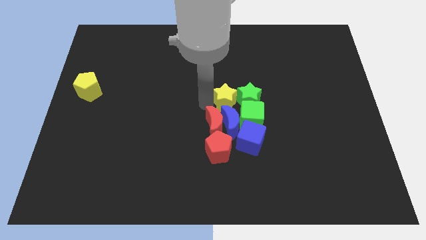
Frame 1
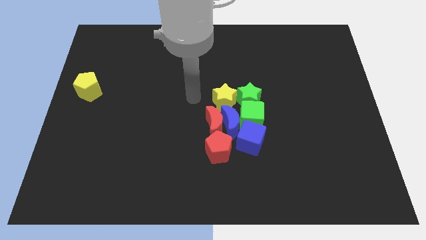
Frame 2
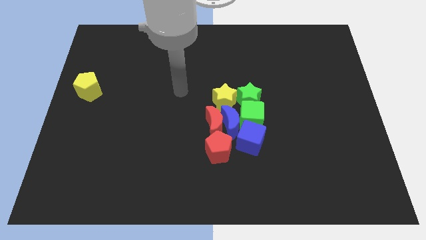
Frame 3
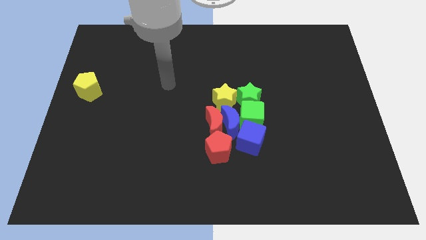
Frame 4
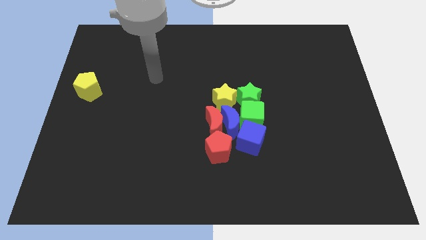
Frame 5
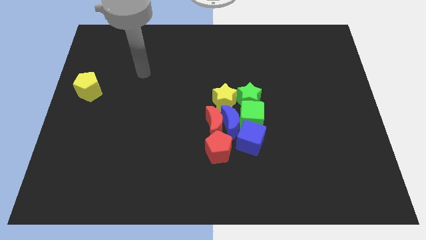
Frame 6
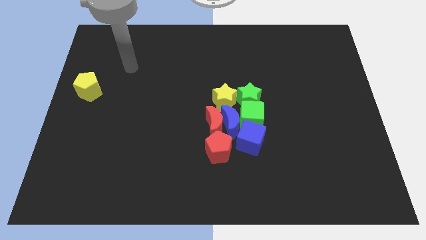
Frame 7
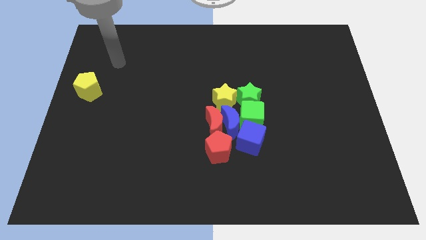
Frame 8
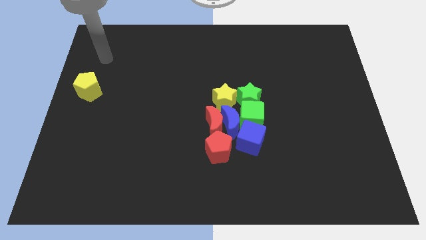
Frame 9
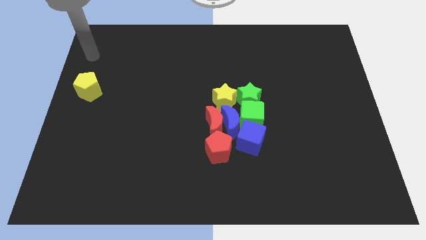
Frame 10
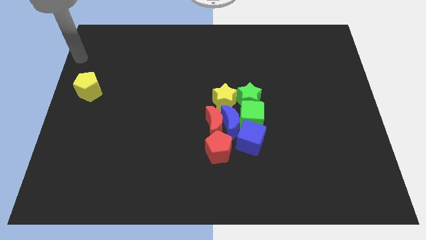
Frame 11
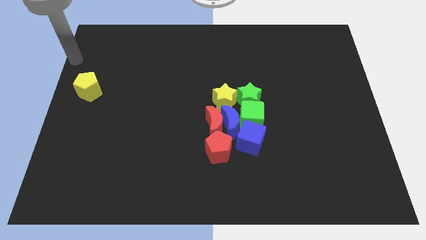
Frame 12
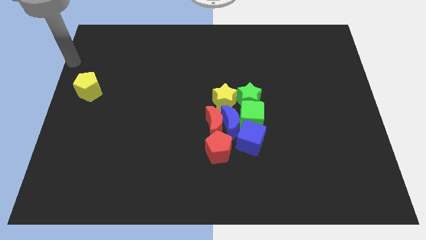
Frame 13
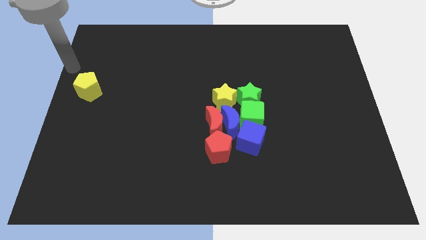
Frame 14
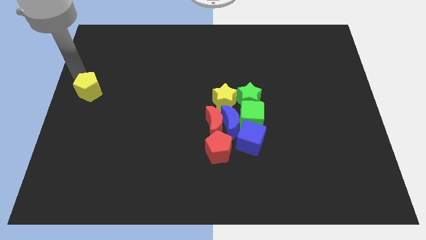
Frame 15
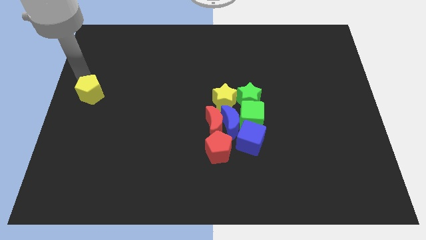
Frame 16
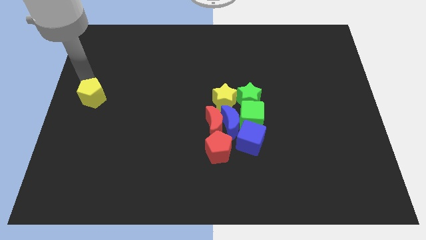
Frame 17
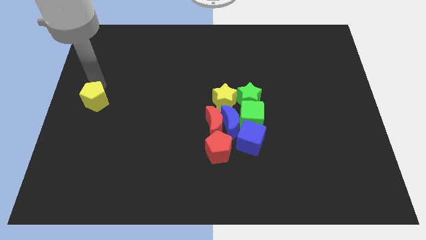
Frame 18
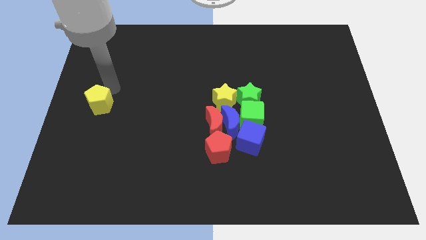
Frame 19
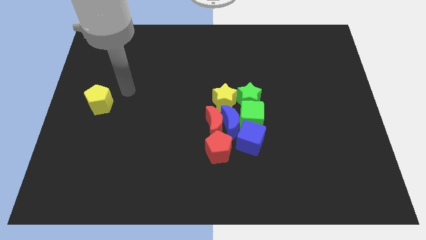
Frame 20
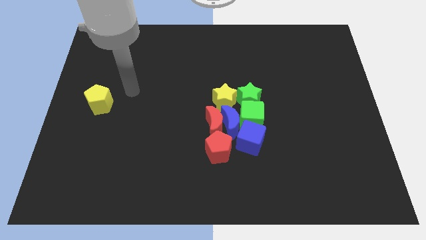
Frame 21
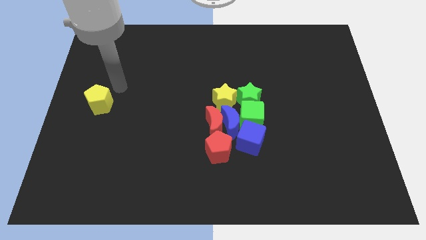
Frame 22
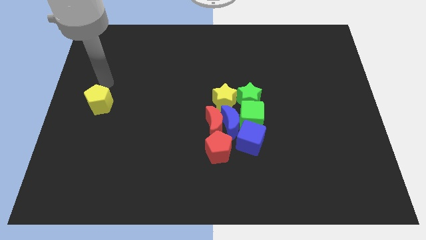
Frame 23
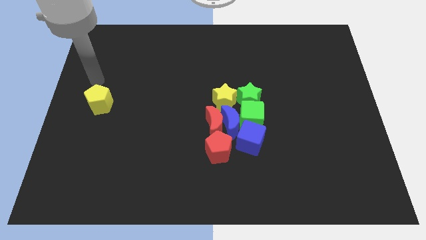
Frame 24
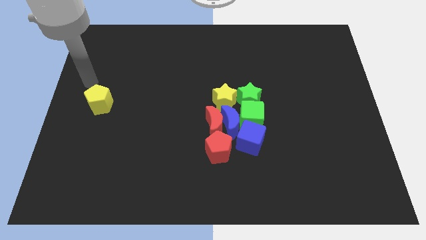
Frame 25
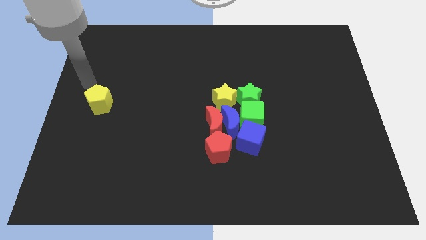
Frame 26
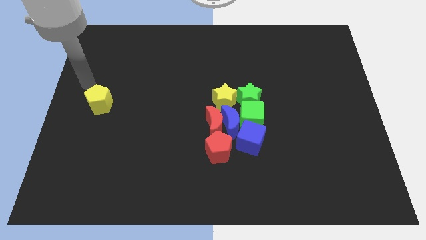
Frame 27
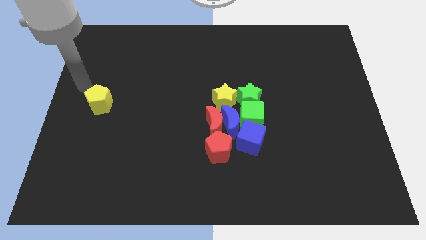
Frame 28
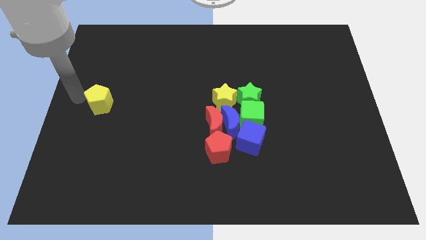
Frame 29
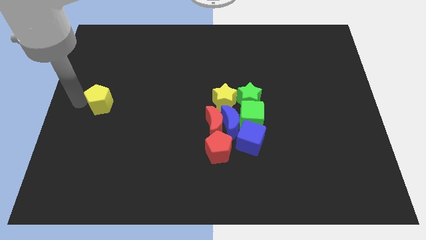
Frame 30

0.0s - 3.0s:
slightly push the yellow pentagon to the center left

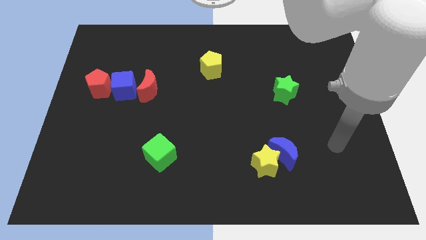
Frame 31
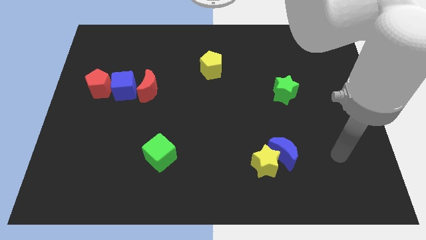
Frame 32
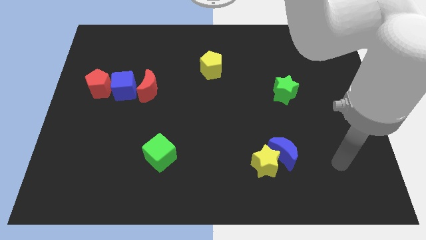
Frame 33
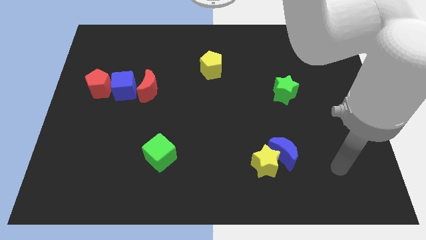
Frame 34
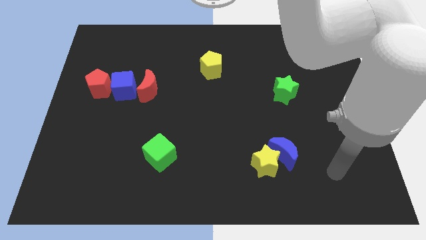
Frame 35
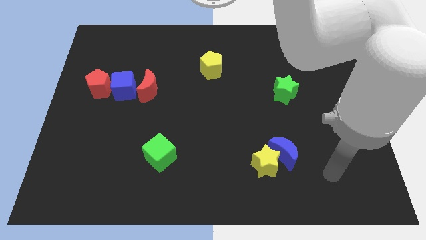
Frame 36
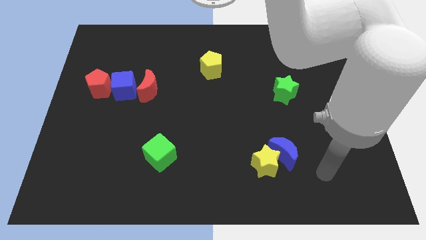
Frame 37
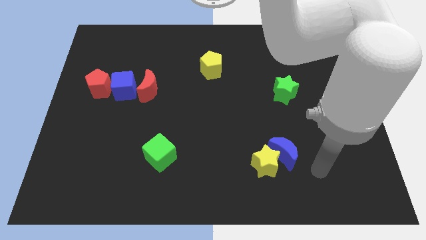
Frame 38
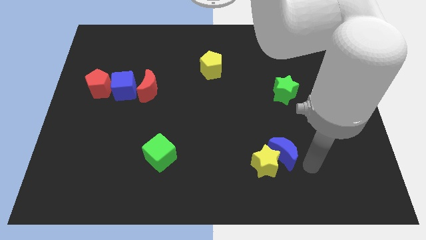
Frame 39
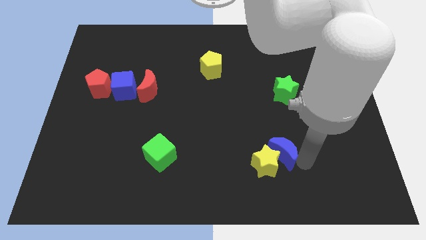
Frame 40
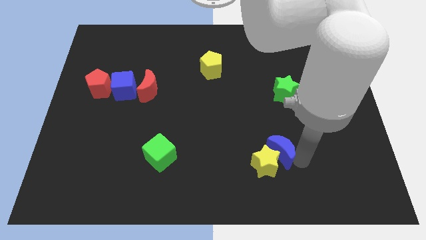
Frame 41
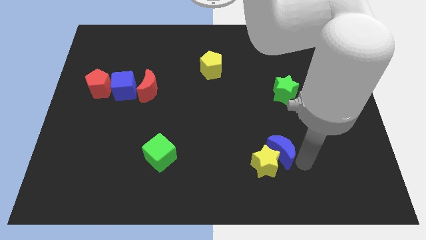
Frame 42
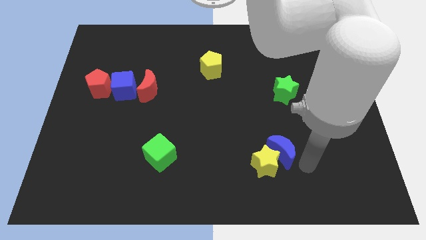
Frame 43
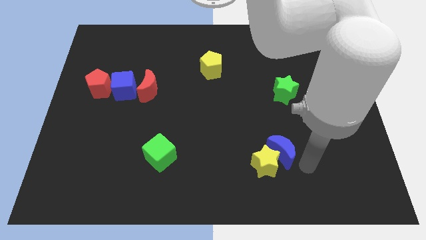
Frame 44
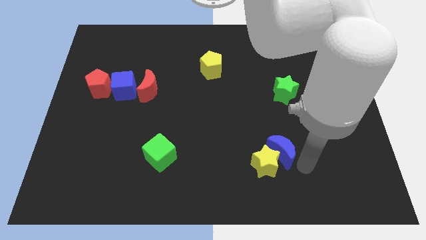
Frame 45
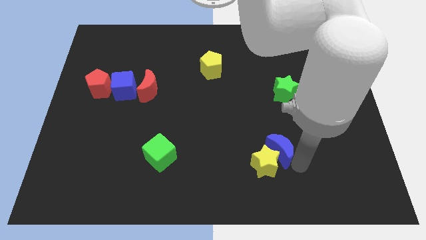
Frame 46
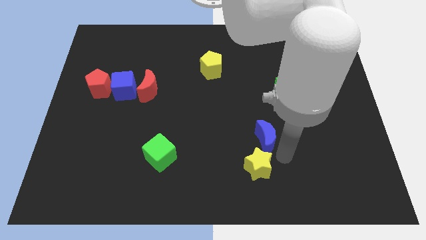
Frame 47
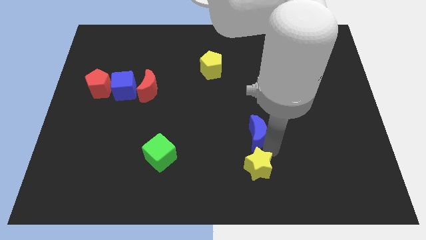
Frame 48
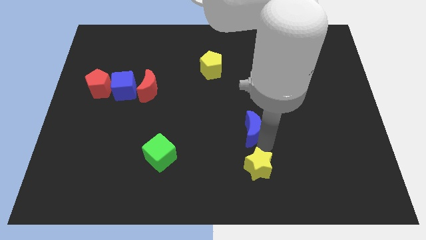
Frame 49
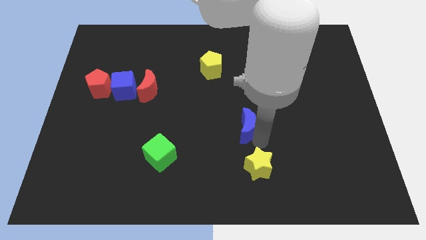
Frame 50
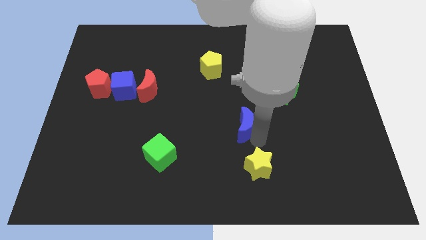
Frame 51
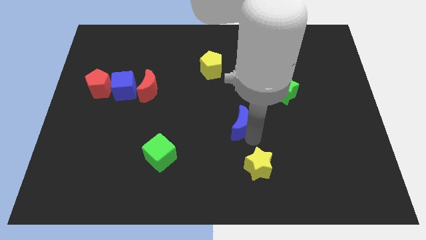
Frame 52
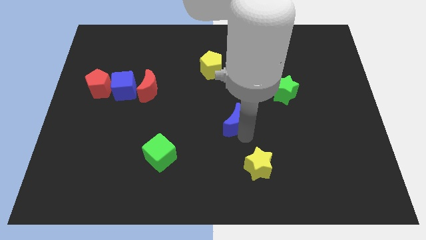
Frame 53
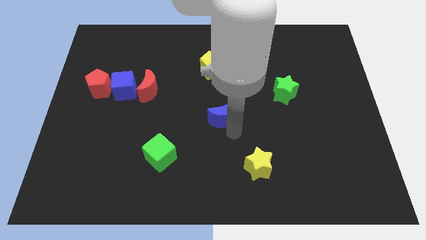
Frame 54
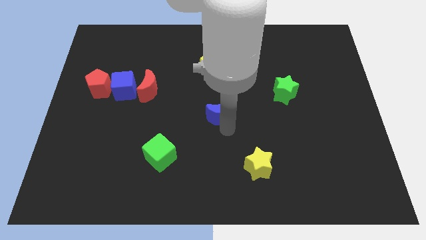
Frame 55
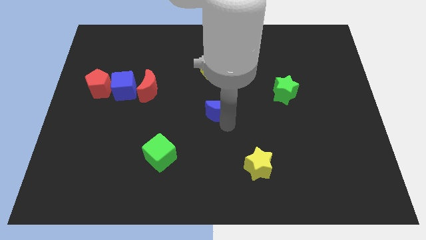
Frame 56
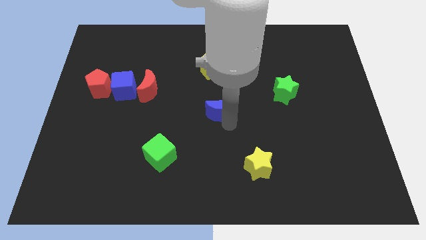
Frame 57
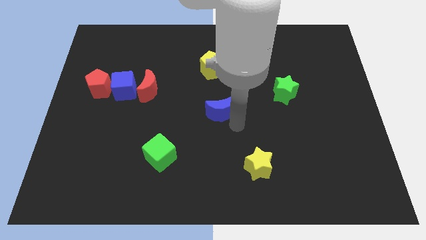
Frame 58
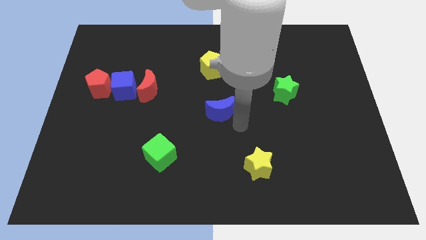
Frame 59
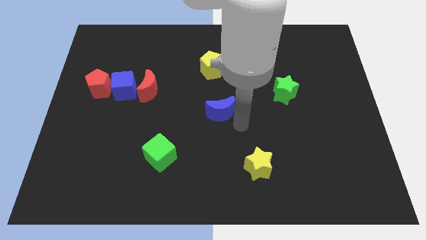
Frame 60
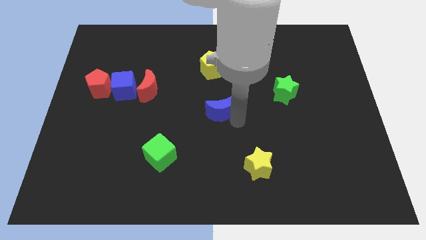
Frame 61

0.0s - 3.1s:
move blue moon to the center of the board

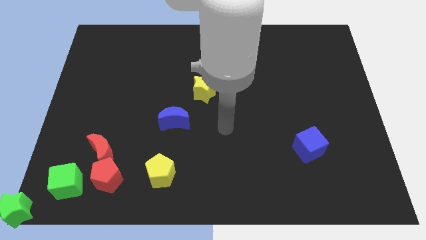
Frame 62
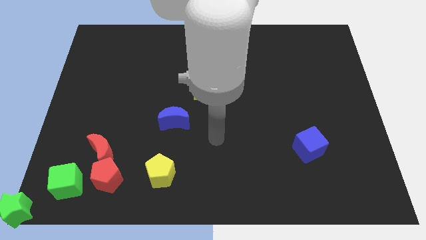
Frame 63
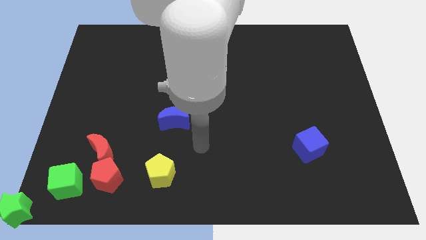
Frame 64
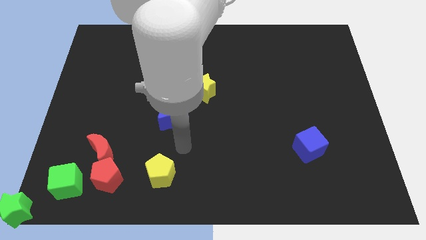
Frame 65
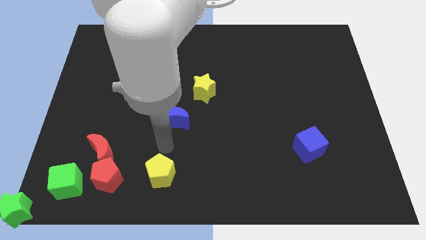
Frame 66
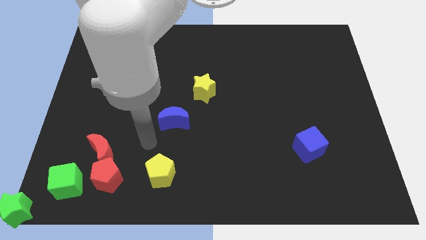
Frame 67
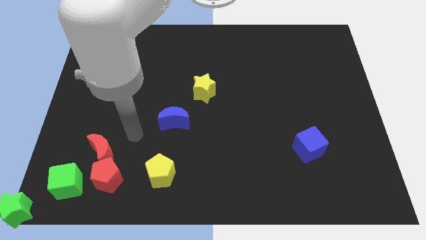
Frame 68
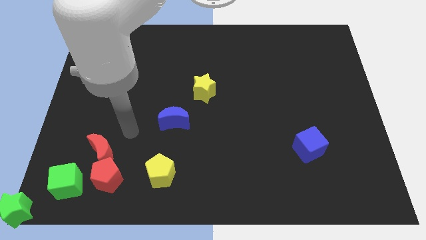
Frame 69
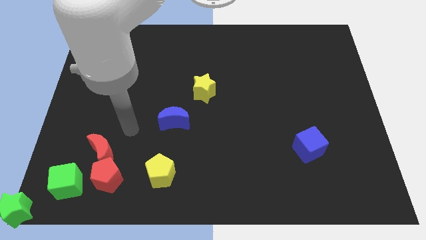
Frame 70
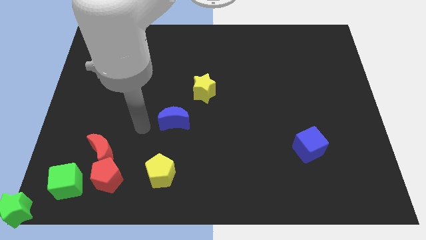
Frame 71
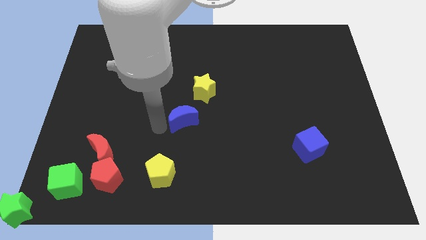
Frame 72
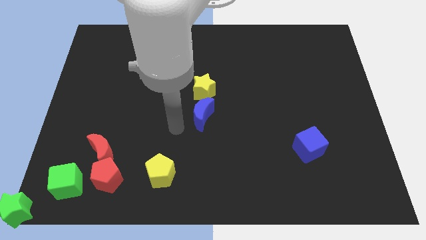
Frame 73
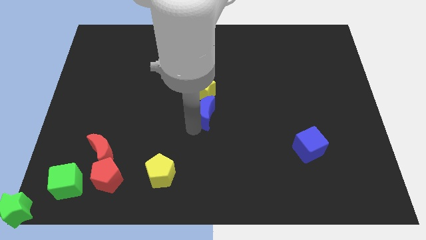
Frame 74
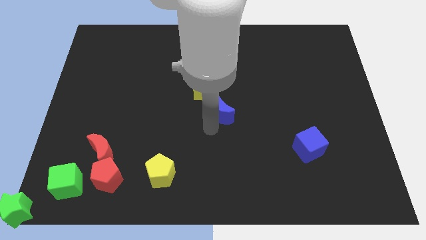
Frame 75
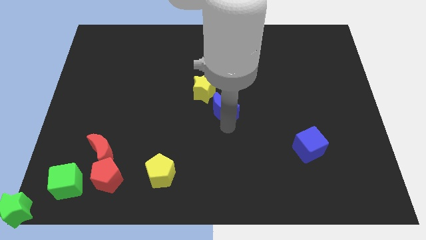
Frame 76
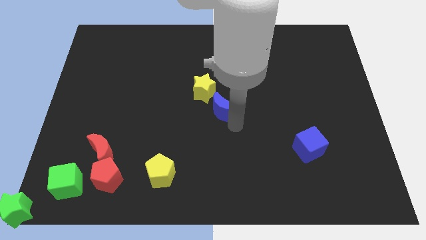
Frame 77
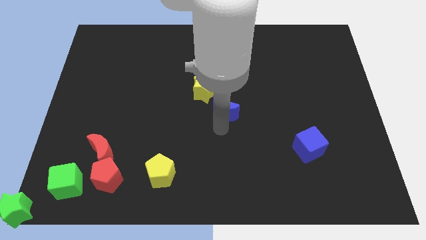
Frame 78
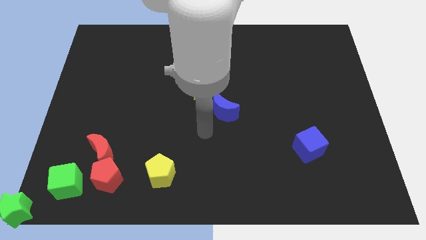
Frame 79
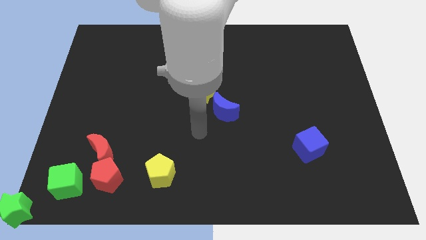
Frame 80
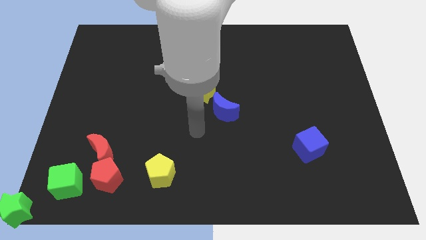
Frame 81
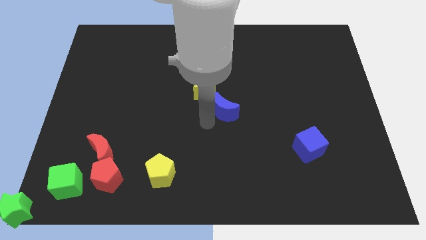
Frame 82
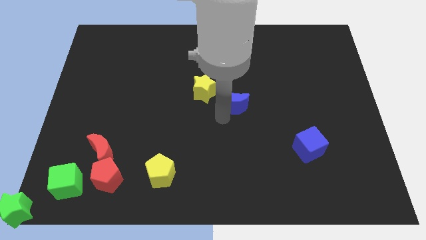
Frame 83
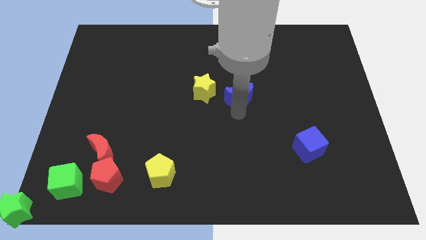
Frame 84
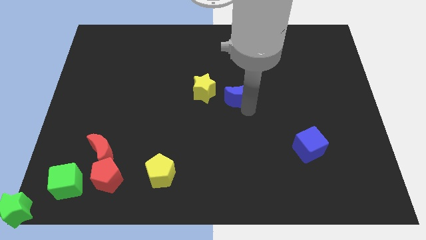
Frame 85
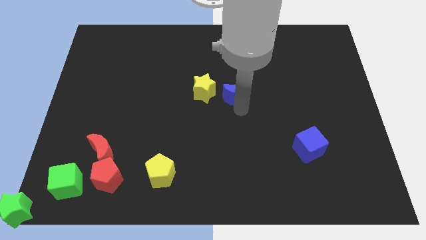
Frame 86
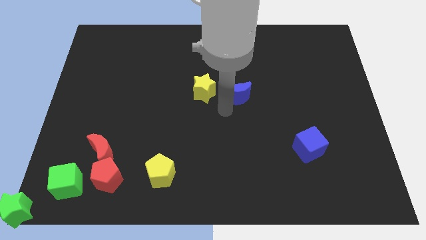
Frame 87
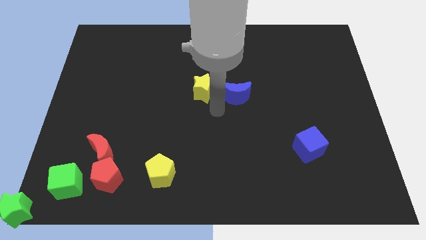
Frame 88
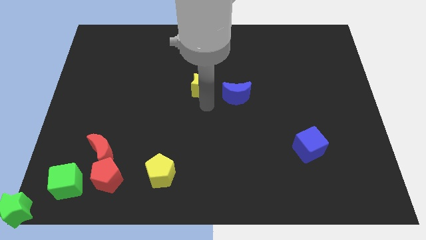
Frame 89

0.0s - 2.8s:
place the blue moon right to the yellow star
